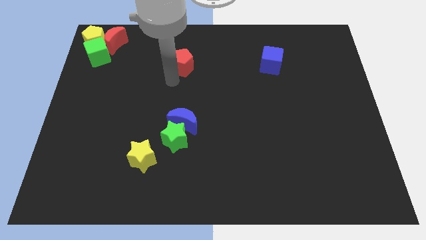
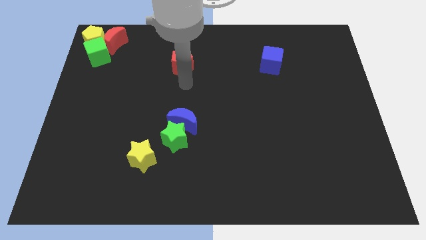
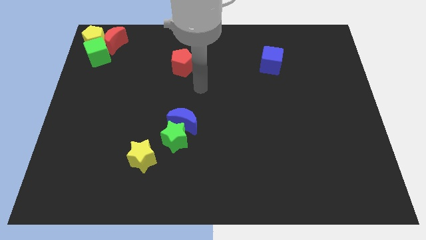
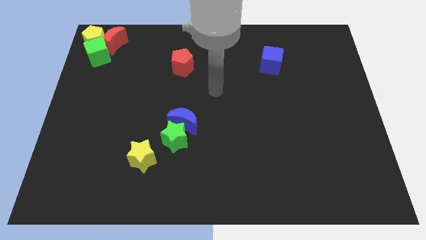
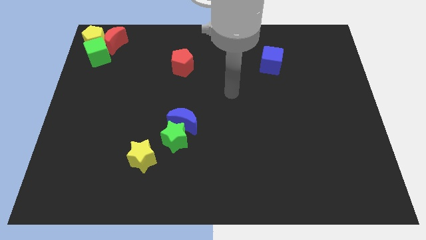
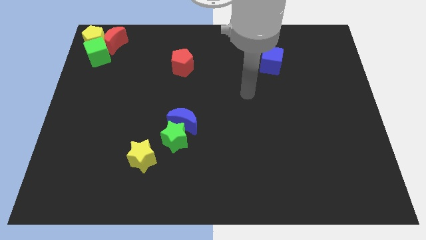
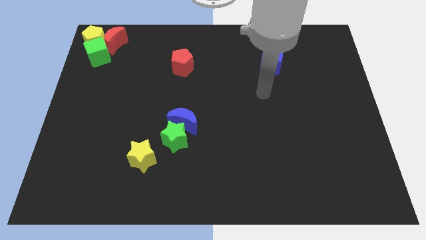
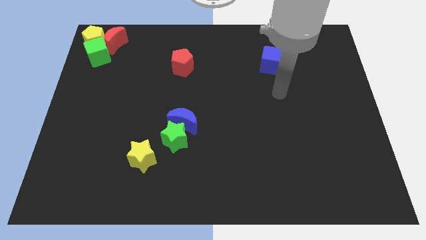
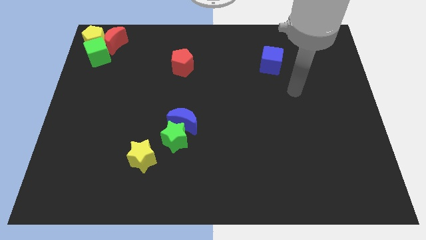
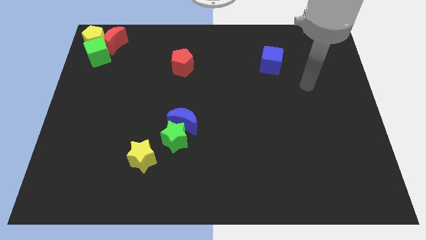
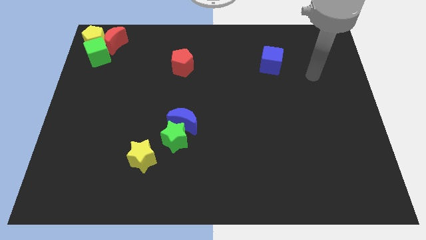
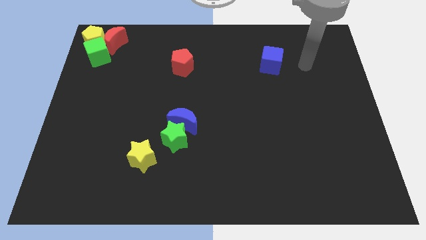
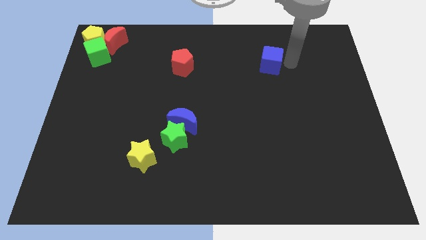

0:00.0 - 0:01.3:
place the arm right to the blue cube

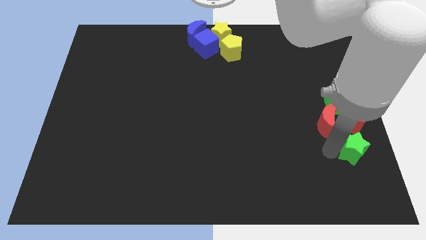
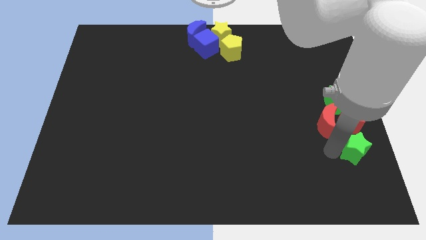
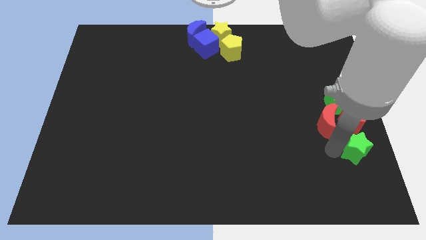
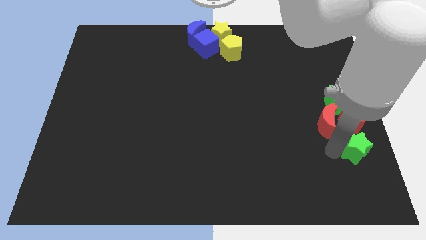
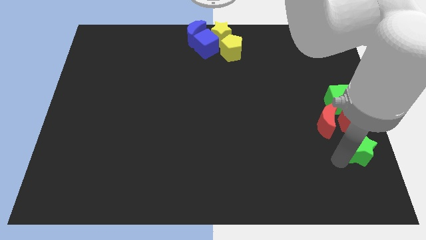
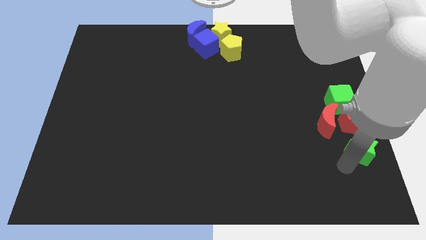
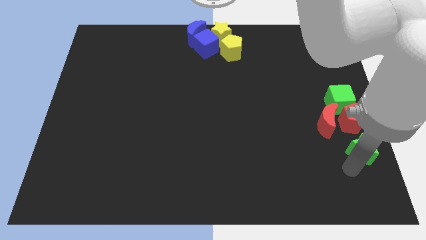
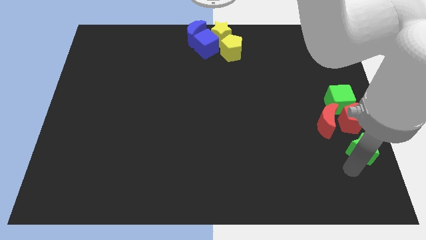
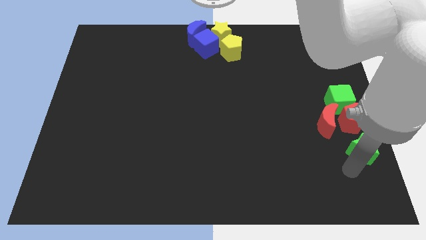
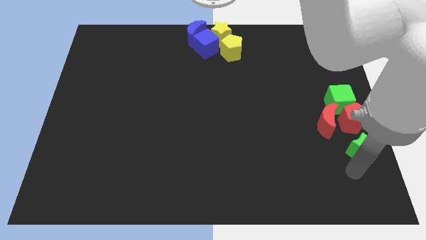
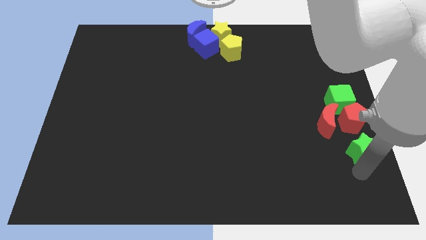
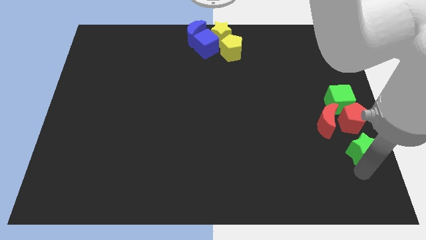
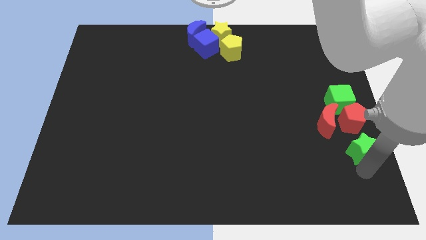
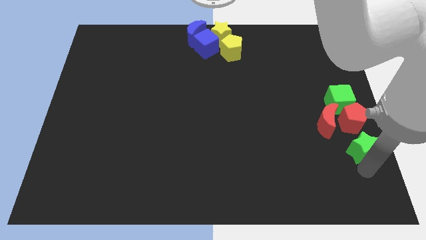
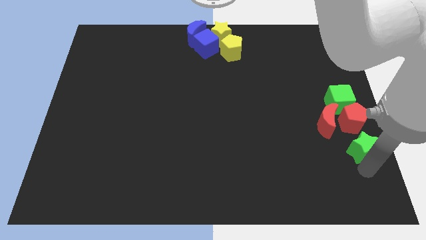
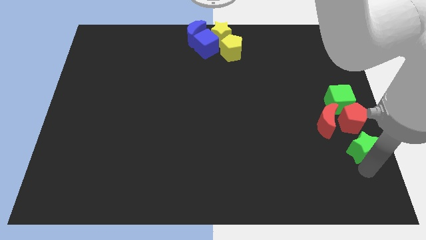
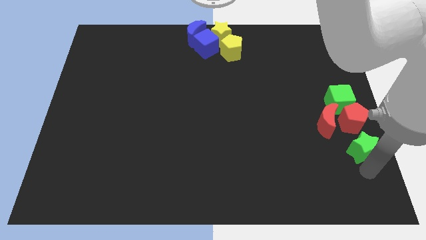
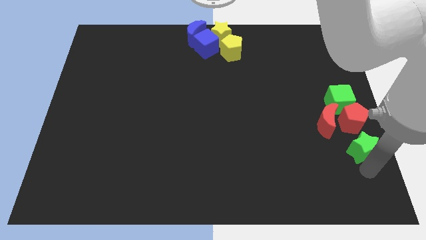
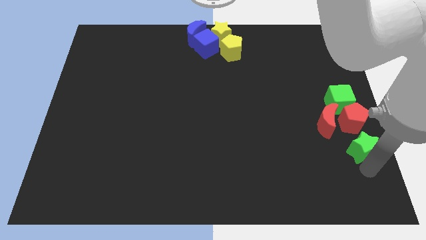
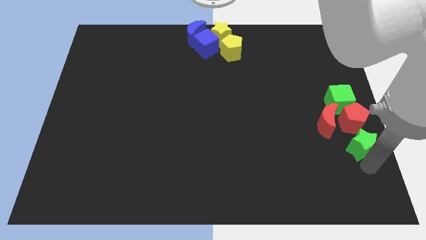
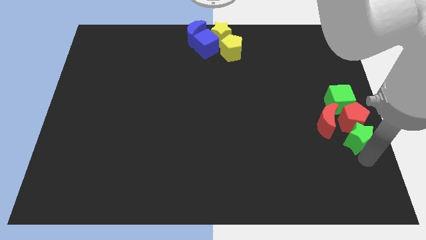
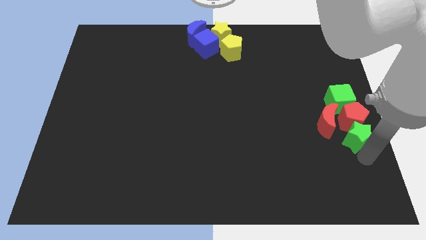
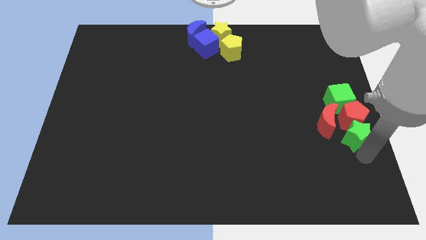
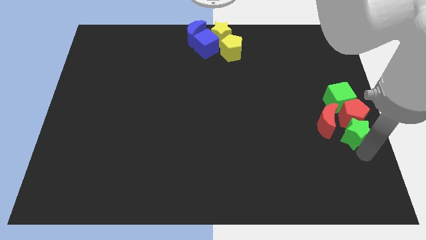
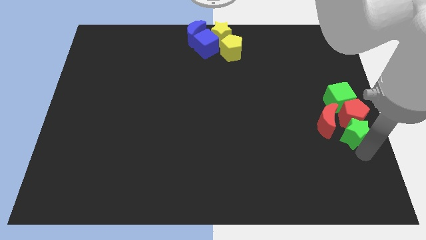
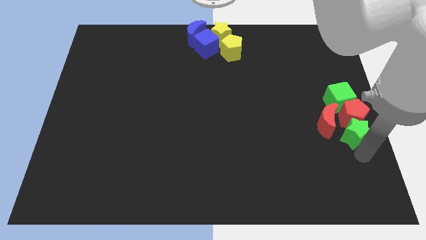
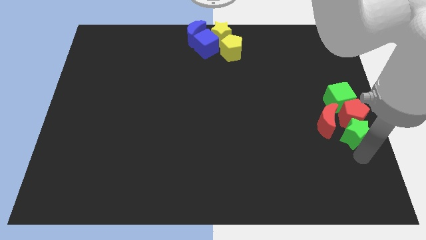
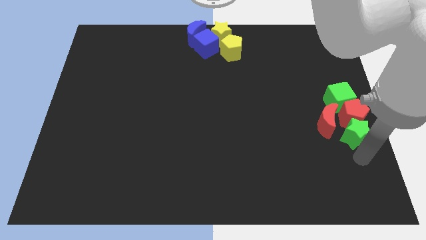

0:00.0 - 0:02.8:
push green star into the red pentagon

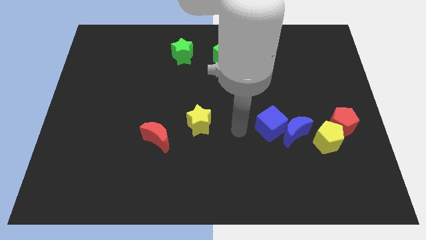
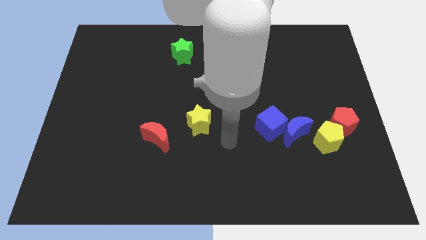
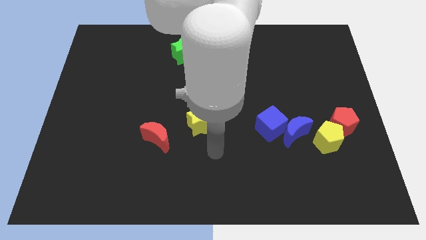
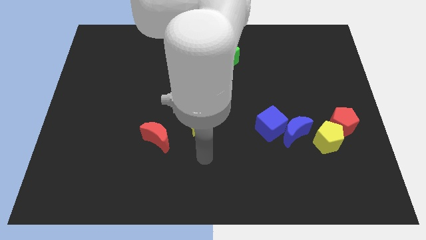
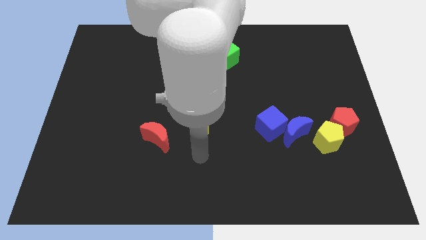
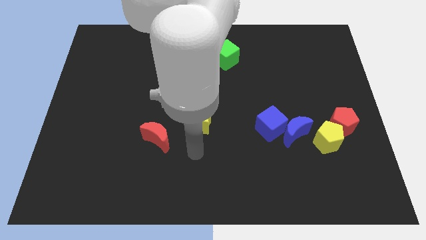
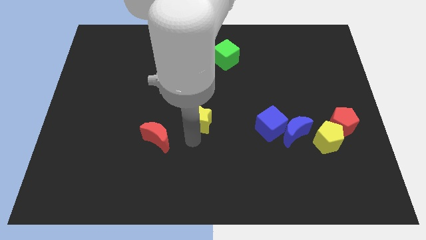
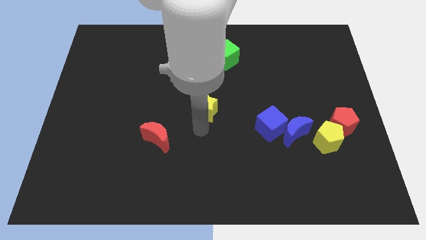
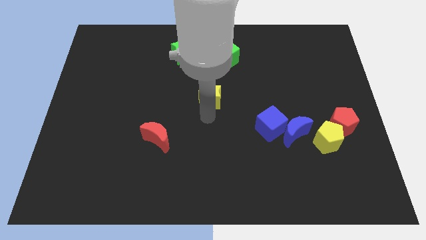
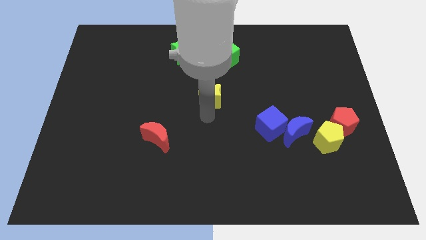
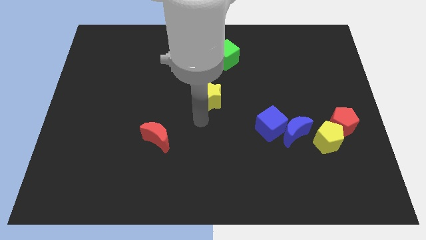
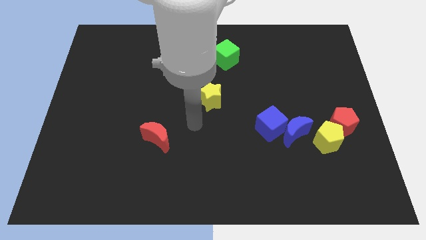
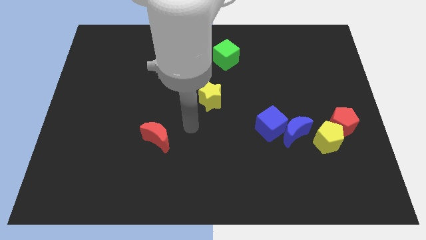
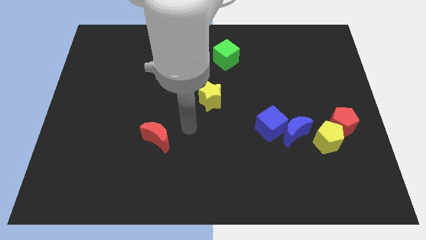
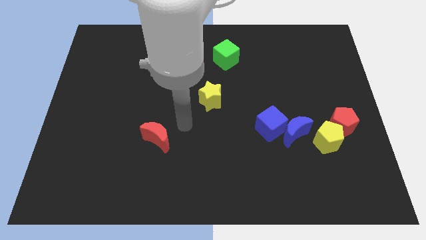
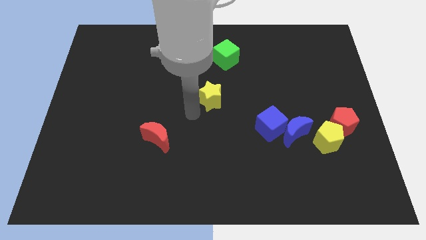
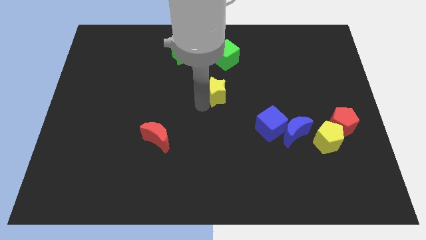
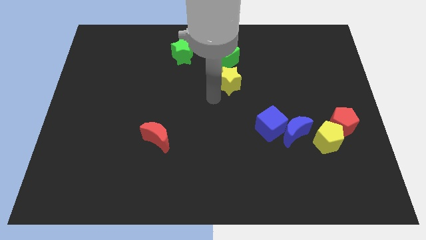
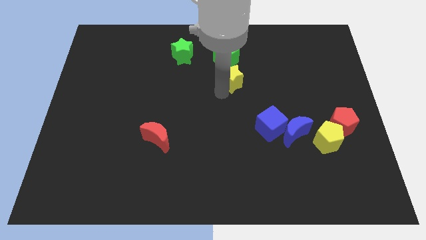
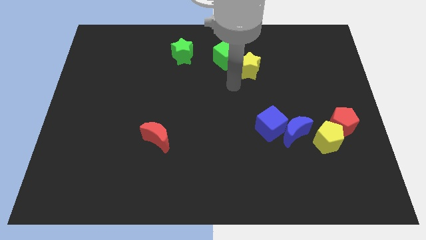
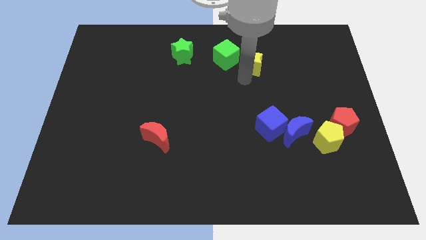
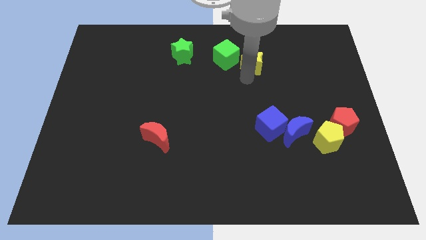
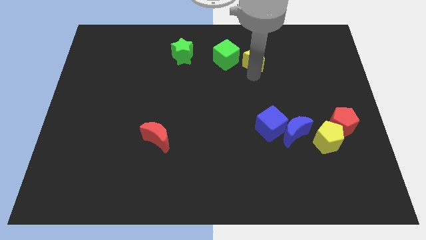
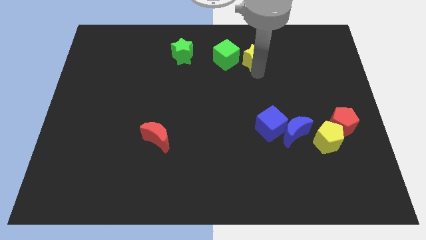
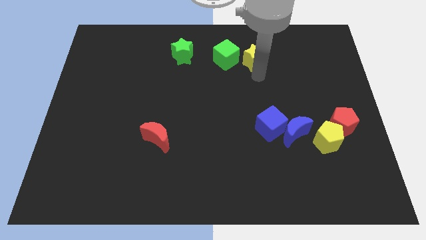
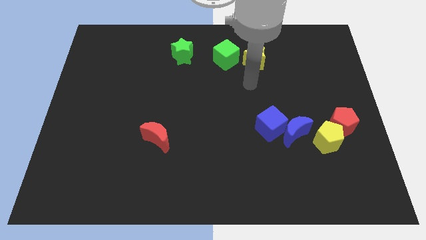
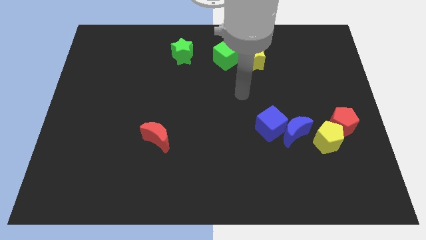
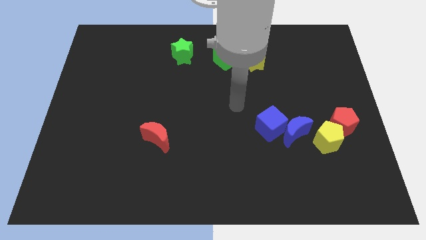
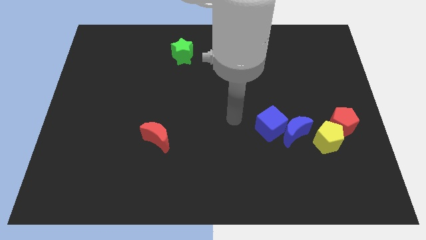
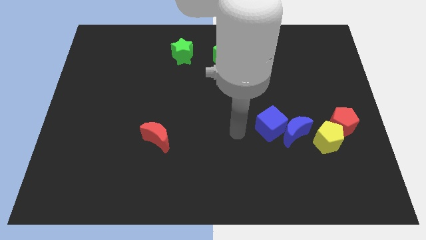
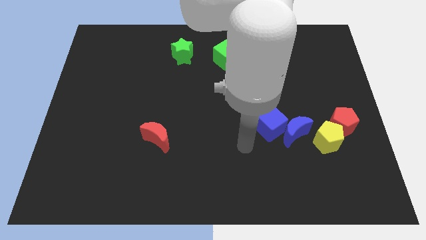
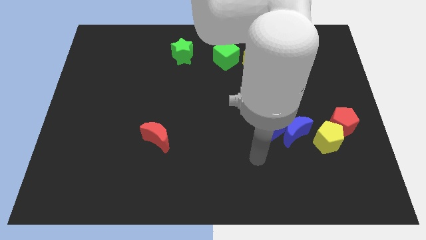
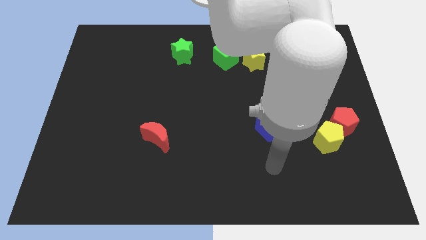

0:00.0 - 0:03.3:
place the yellow star to the left side of the blue cube

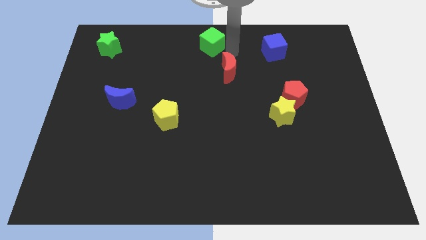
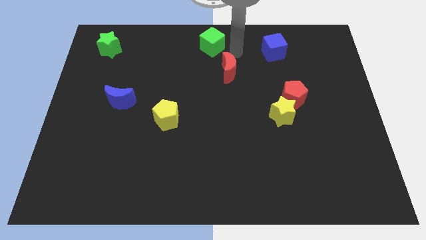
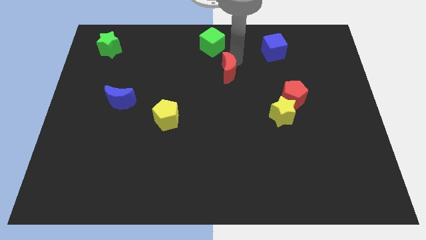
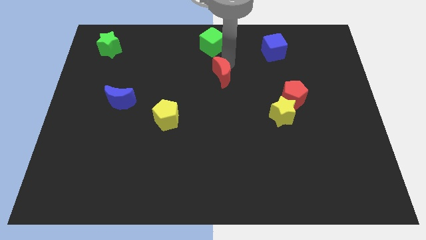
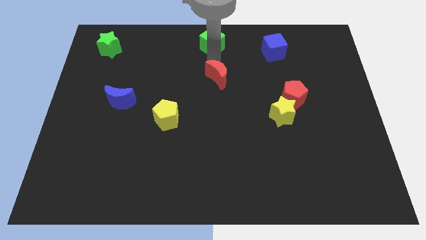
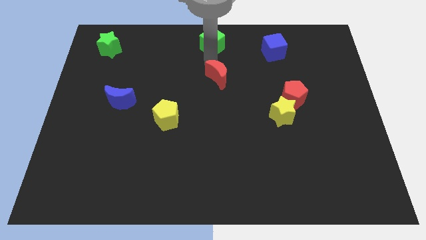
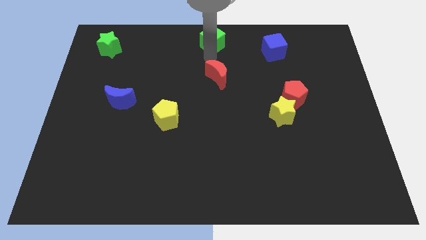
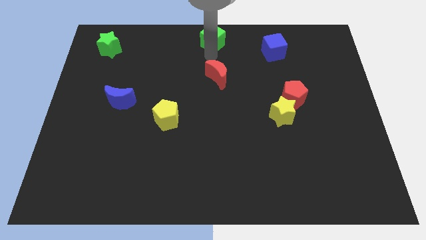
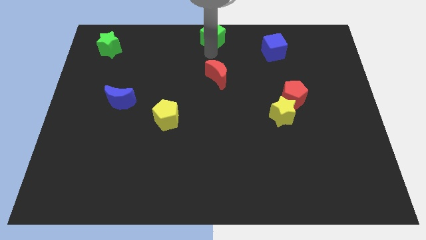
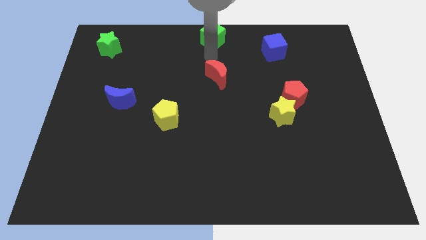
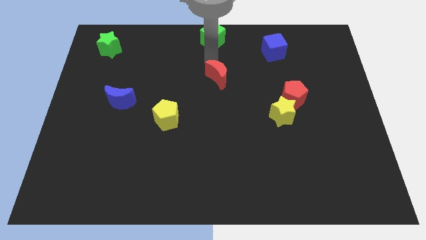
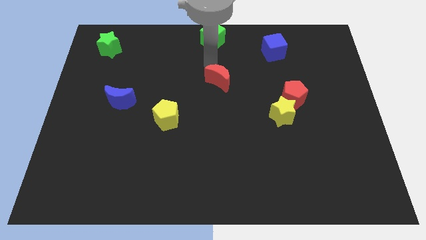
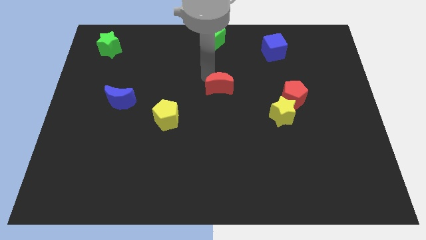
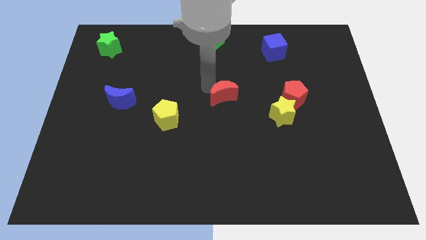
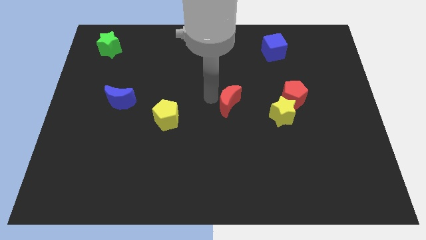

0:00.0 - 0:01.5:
move red moon to the center of the board
